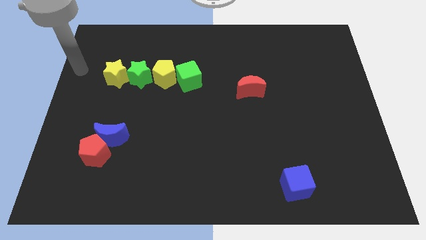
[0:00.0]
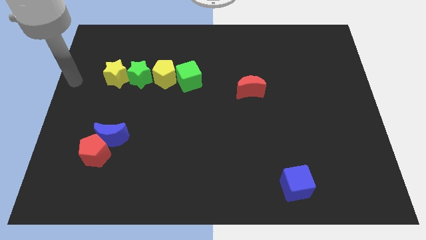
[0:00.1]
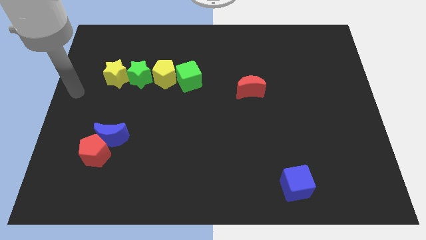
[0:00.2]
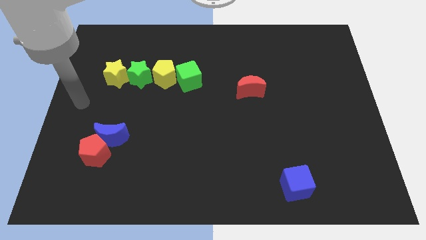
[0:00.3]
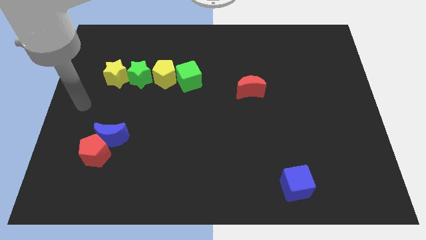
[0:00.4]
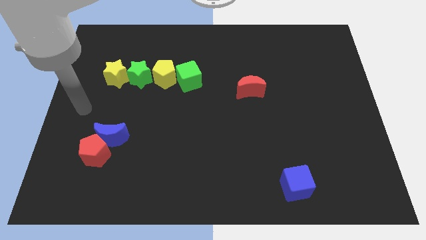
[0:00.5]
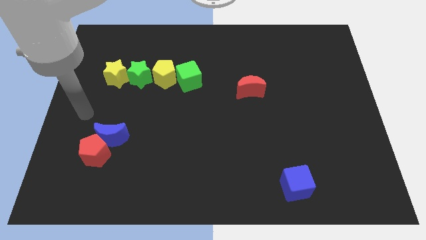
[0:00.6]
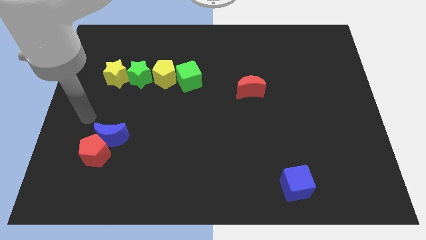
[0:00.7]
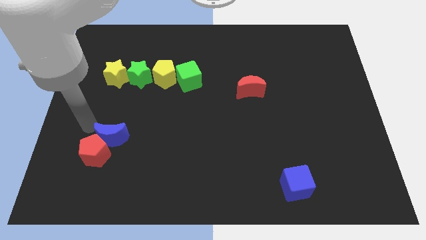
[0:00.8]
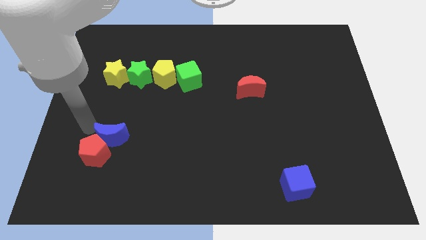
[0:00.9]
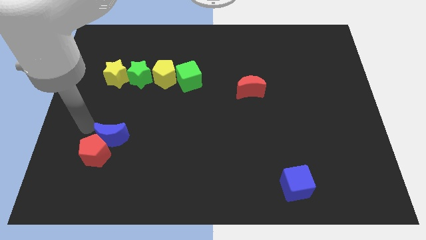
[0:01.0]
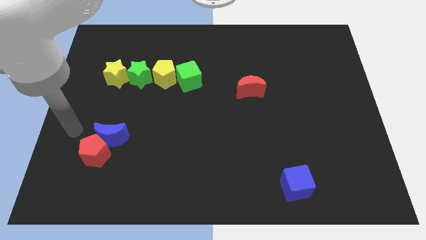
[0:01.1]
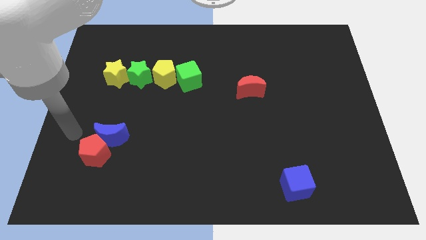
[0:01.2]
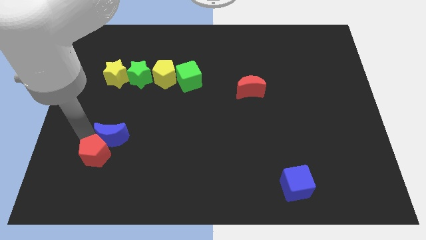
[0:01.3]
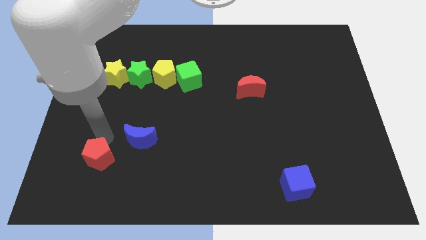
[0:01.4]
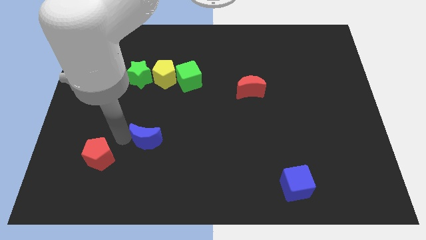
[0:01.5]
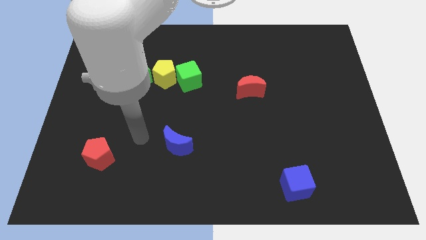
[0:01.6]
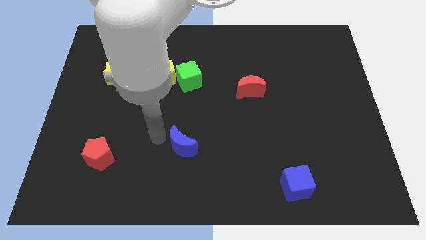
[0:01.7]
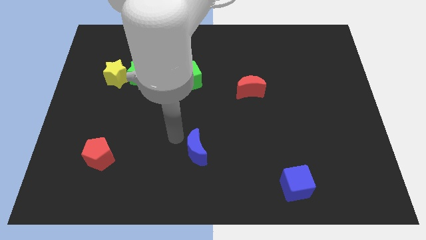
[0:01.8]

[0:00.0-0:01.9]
separate red pentagon and blue crescent

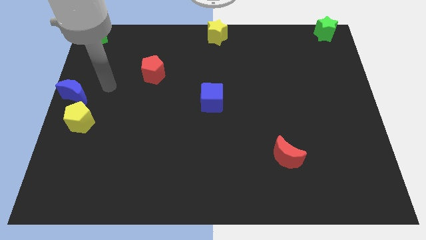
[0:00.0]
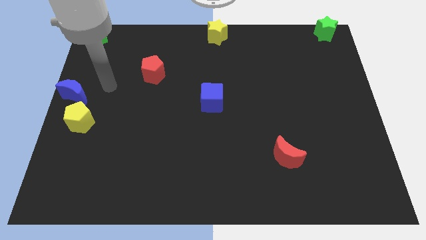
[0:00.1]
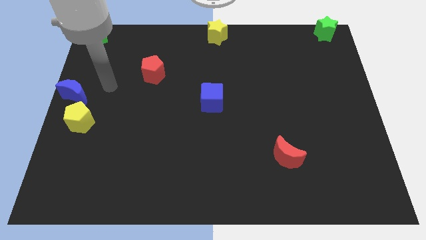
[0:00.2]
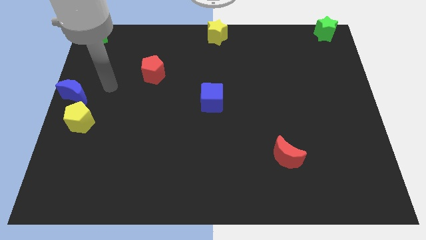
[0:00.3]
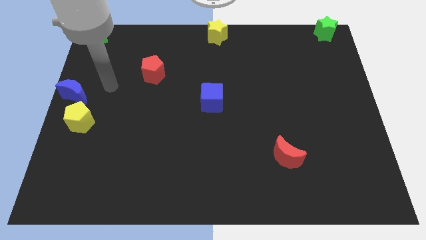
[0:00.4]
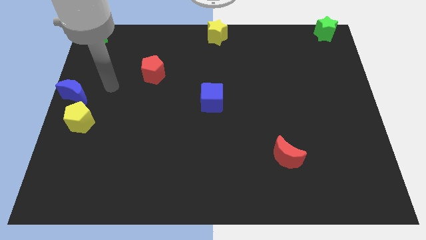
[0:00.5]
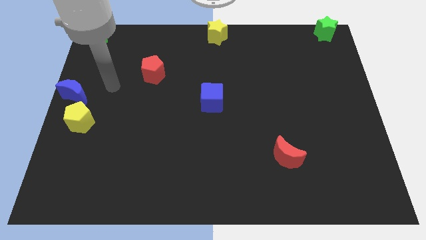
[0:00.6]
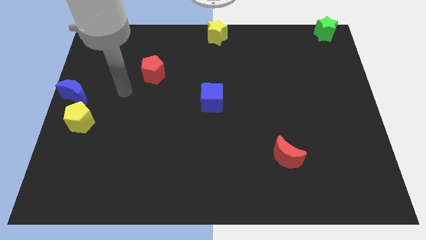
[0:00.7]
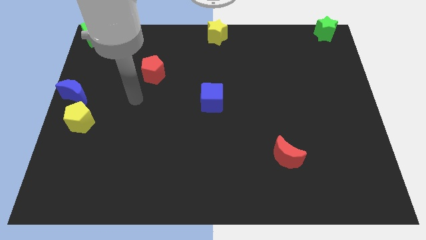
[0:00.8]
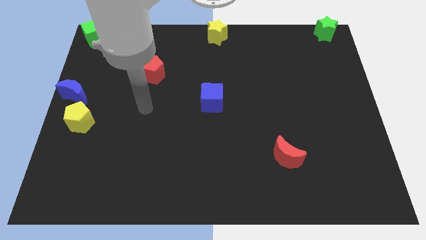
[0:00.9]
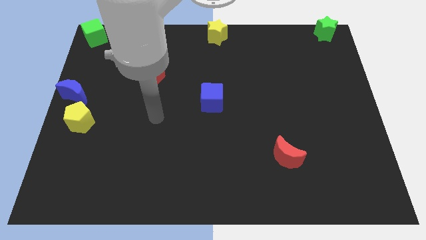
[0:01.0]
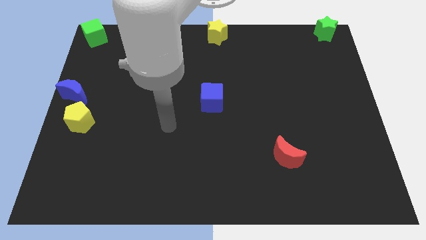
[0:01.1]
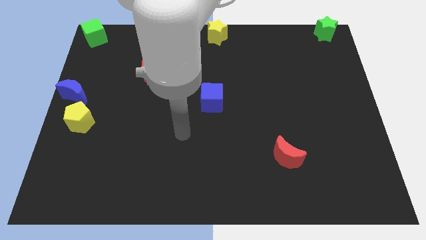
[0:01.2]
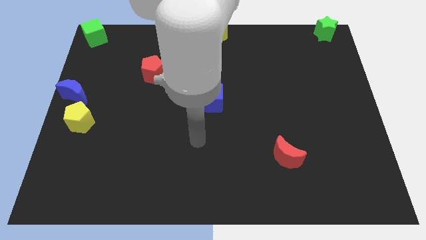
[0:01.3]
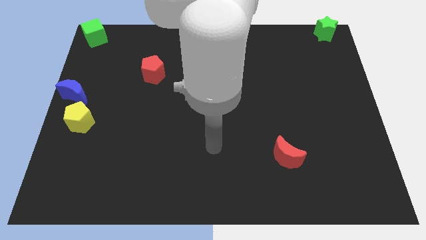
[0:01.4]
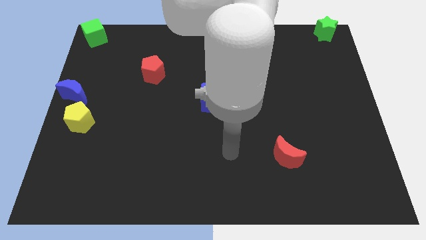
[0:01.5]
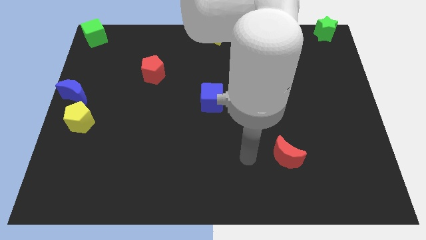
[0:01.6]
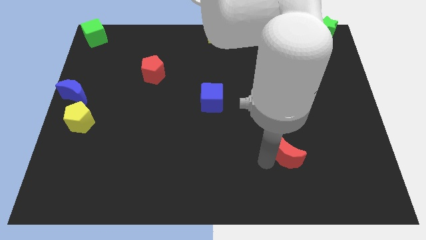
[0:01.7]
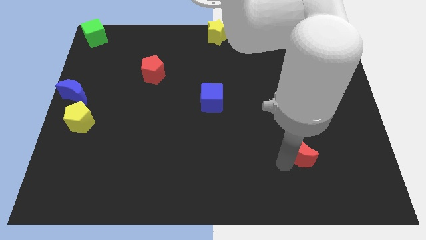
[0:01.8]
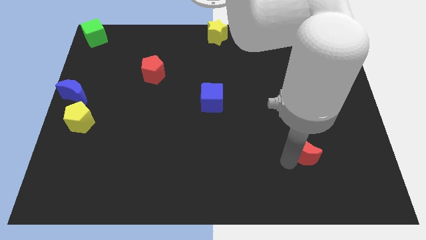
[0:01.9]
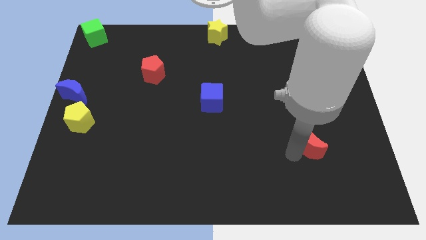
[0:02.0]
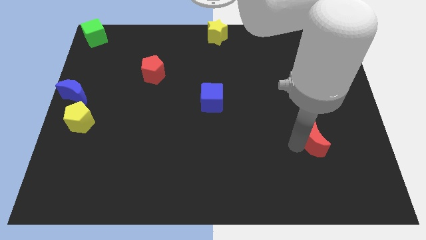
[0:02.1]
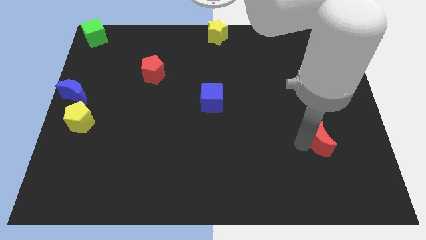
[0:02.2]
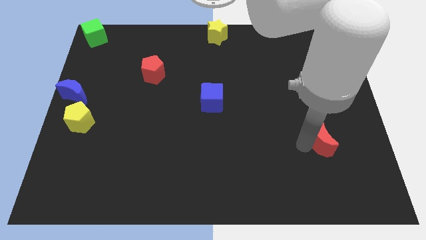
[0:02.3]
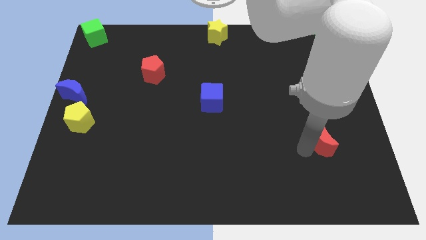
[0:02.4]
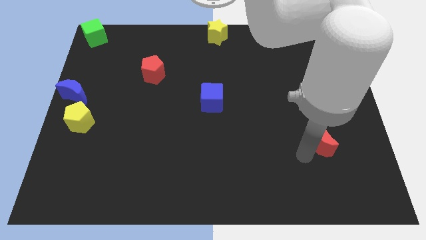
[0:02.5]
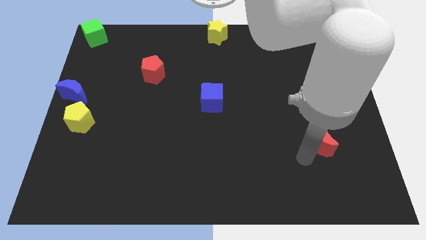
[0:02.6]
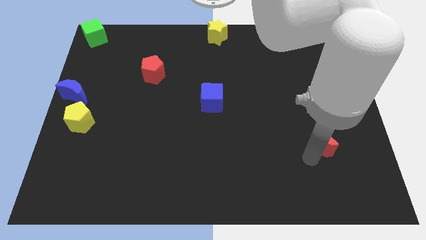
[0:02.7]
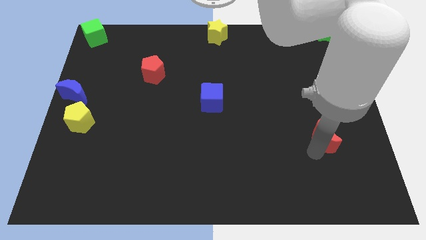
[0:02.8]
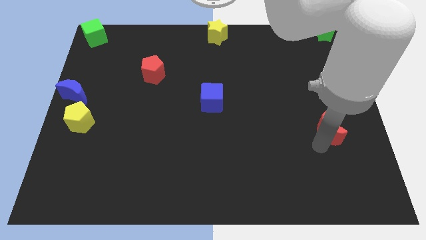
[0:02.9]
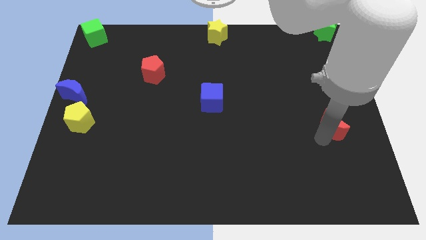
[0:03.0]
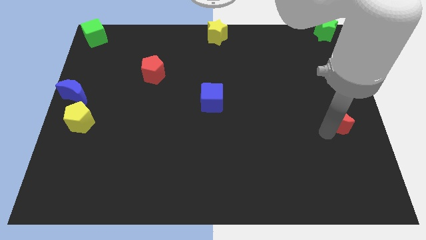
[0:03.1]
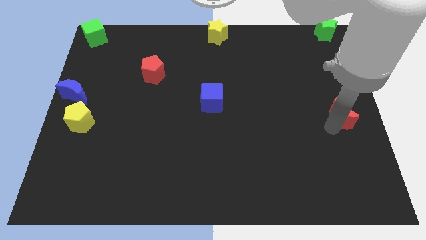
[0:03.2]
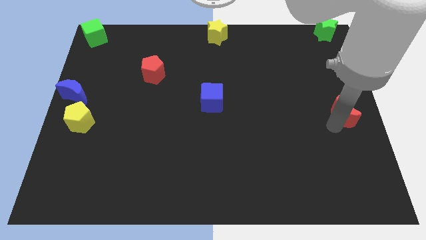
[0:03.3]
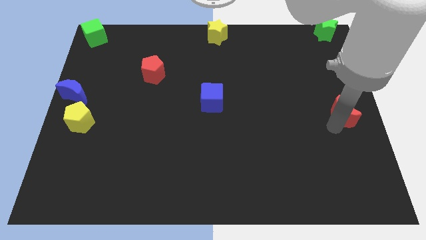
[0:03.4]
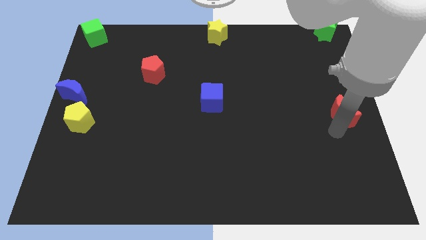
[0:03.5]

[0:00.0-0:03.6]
move the red moon to the right side of the board

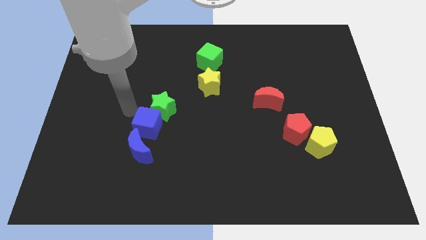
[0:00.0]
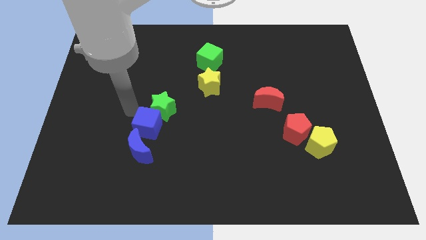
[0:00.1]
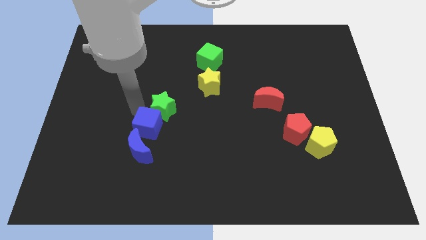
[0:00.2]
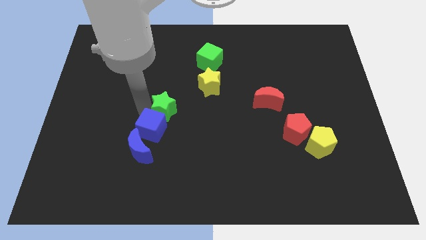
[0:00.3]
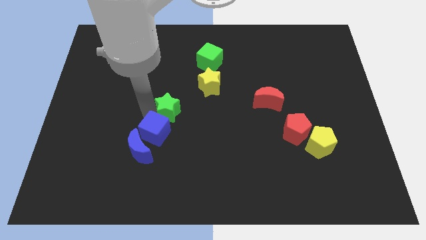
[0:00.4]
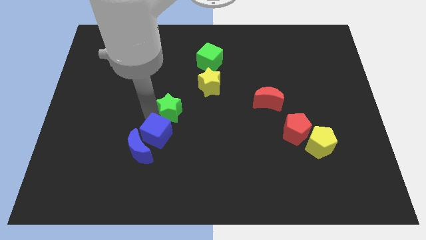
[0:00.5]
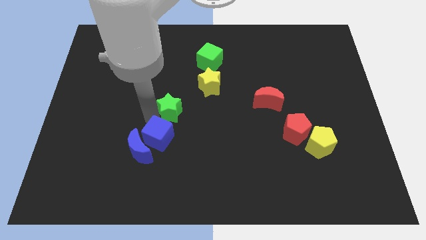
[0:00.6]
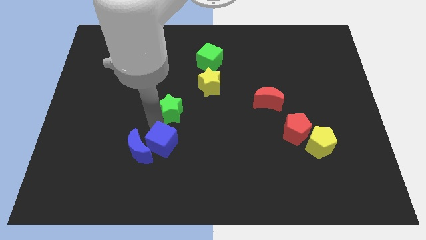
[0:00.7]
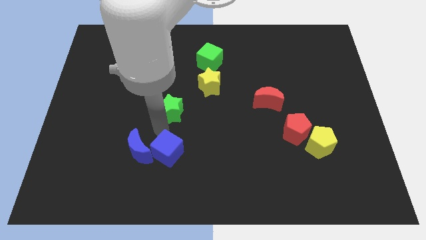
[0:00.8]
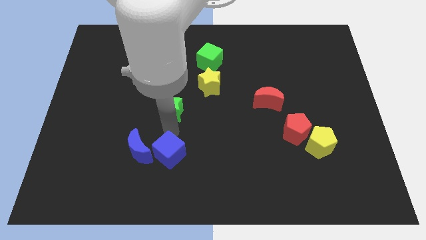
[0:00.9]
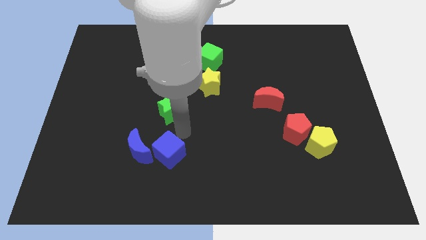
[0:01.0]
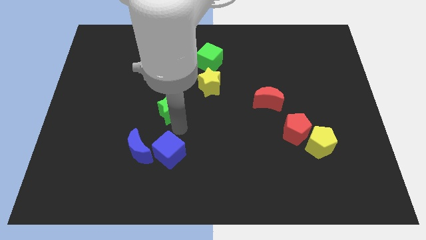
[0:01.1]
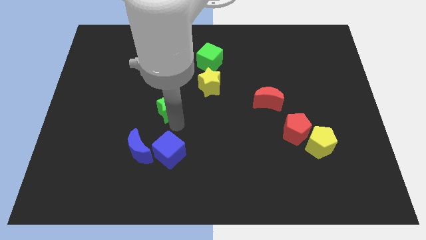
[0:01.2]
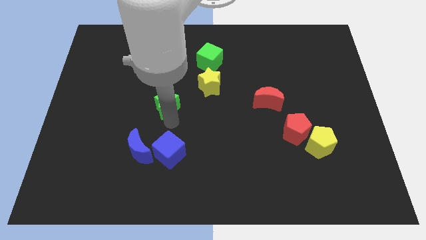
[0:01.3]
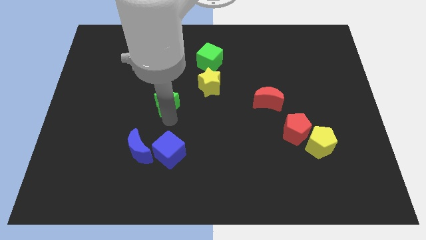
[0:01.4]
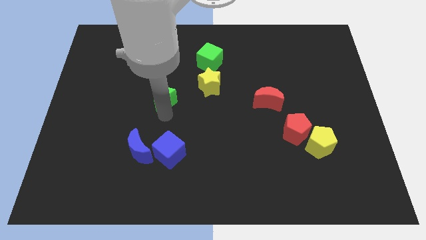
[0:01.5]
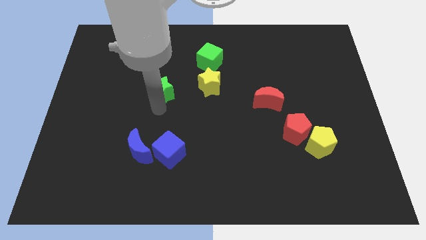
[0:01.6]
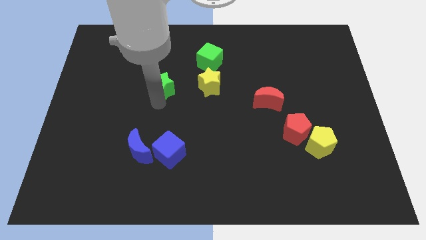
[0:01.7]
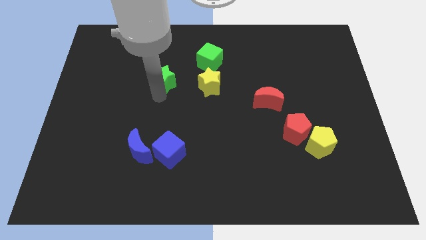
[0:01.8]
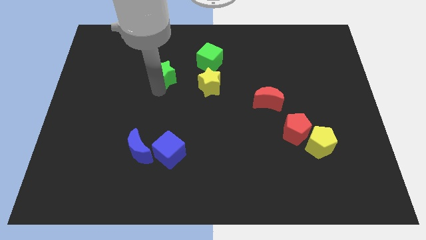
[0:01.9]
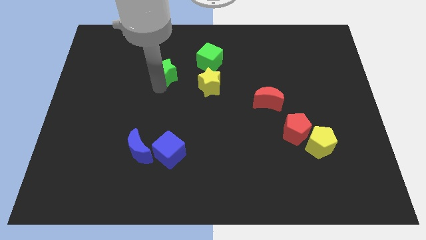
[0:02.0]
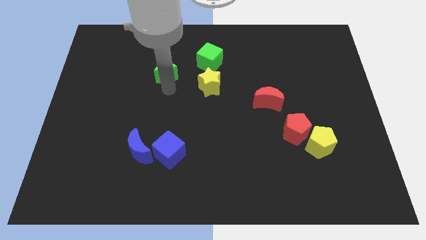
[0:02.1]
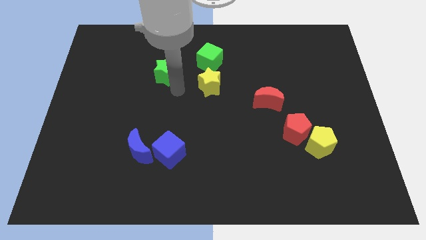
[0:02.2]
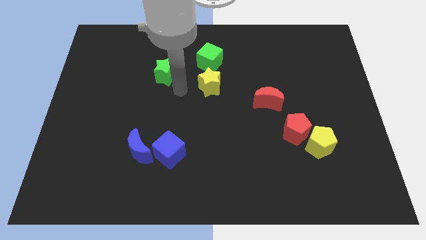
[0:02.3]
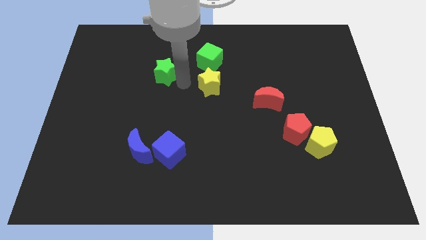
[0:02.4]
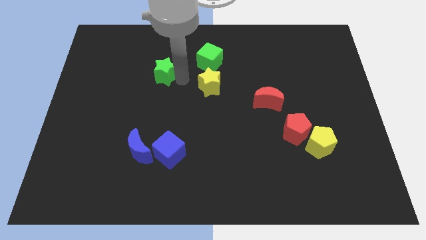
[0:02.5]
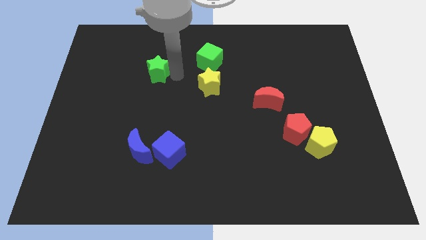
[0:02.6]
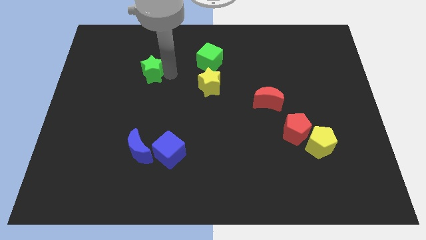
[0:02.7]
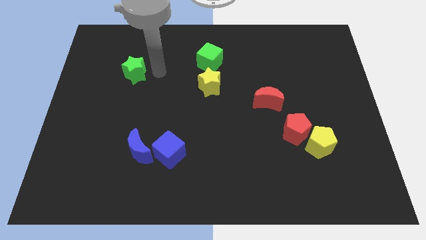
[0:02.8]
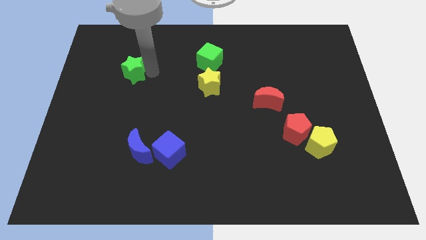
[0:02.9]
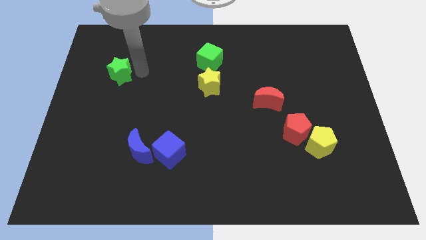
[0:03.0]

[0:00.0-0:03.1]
separate the green star from the blue cube

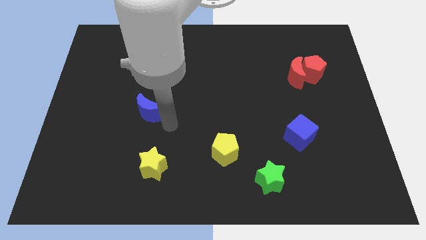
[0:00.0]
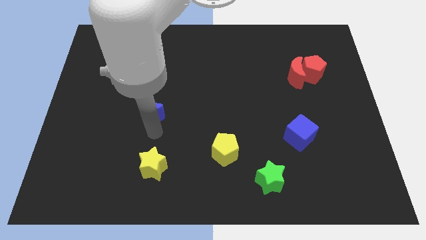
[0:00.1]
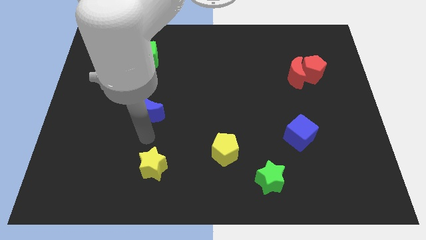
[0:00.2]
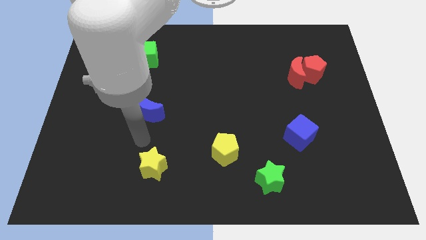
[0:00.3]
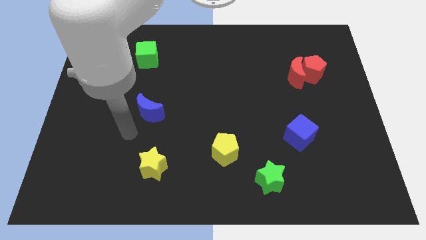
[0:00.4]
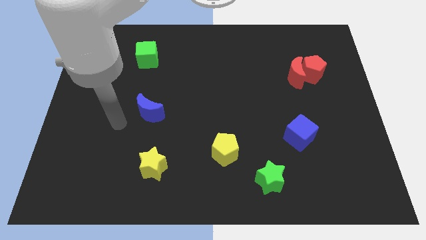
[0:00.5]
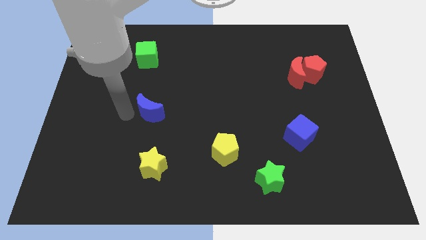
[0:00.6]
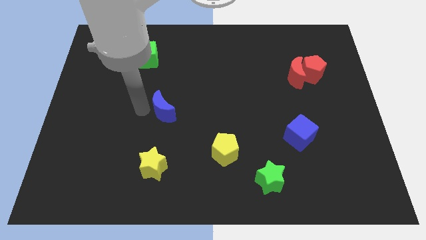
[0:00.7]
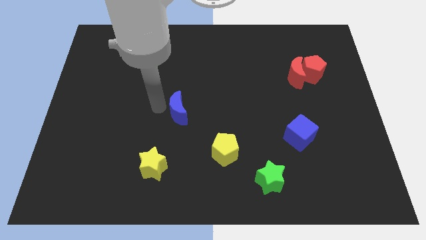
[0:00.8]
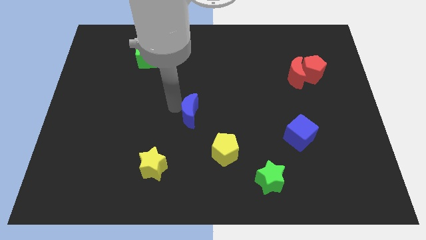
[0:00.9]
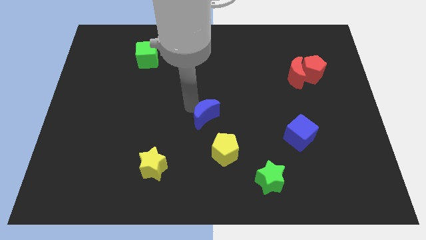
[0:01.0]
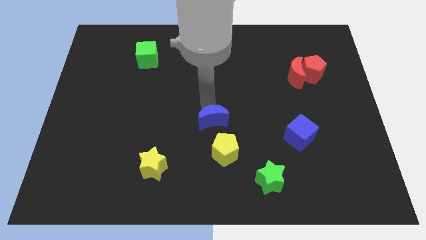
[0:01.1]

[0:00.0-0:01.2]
push the blue moon diagonally top right to the yellow star
